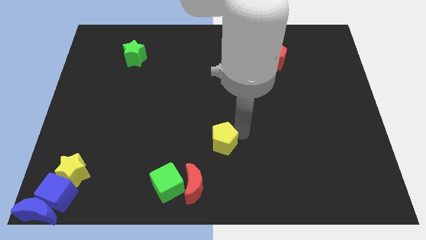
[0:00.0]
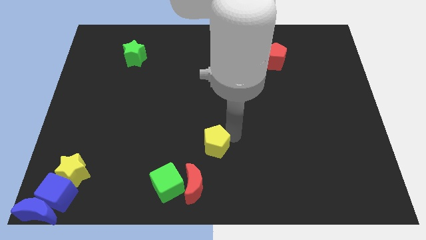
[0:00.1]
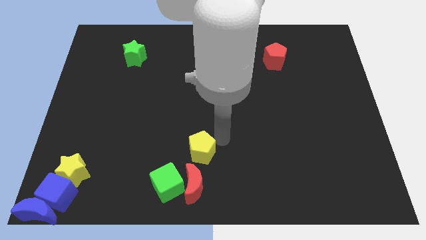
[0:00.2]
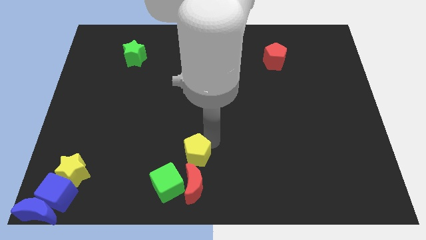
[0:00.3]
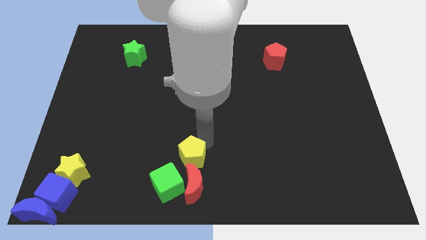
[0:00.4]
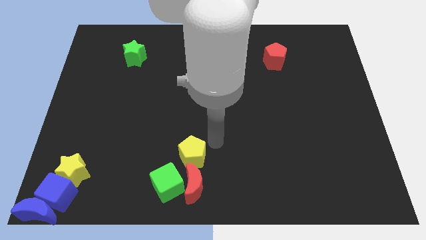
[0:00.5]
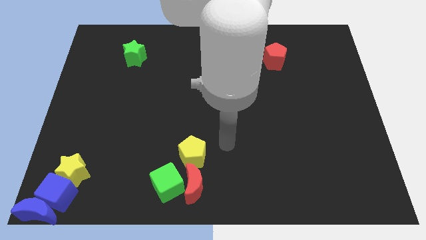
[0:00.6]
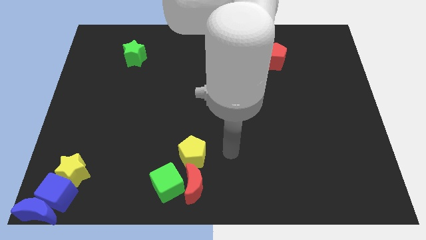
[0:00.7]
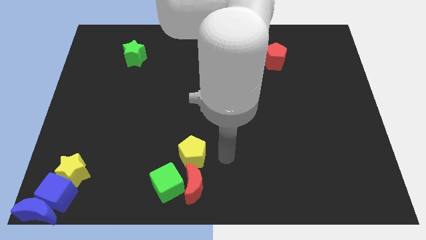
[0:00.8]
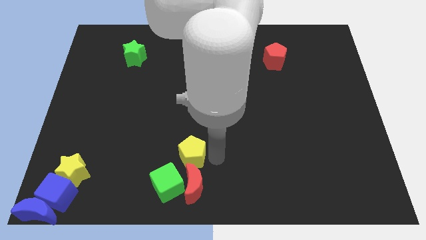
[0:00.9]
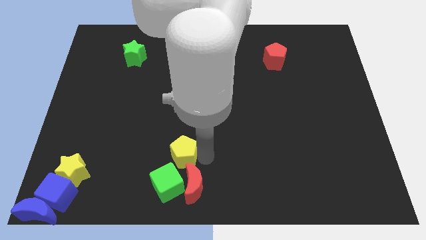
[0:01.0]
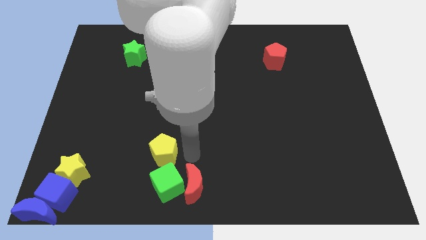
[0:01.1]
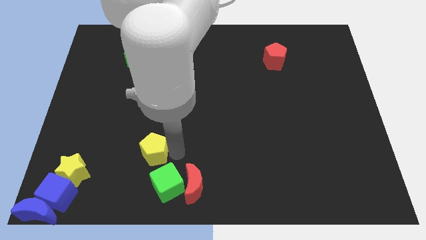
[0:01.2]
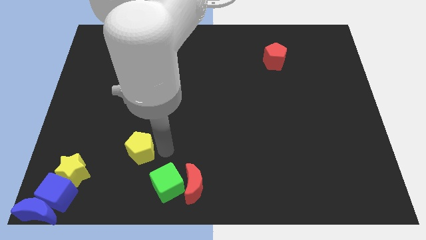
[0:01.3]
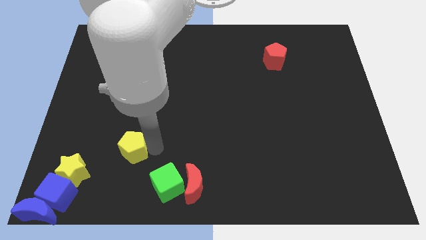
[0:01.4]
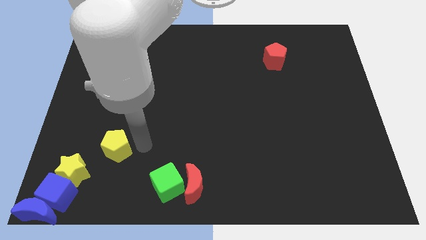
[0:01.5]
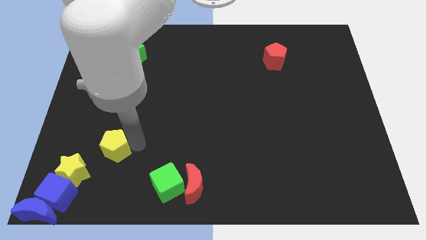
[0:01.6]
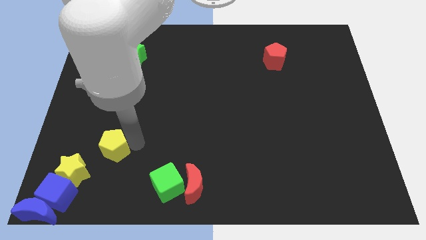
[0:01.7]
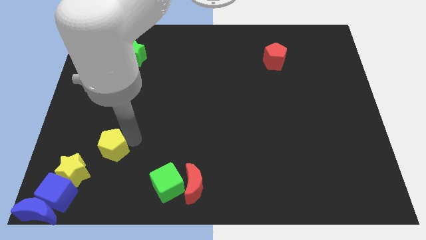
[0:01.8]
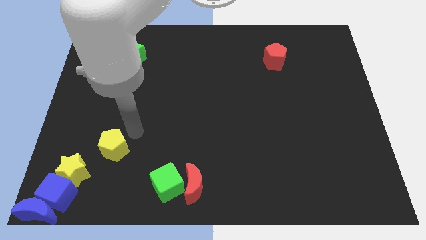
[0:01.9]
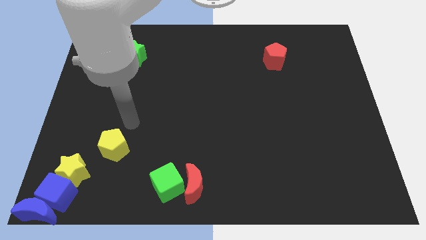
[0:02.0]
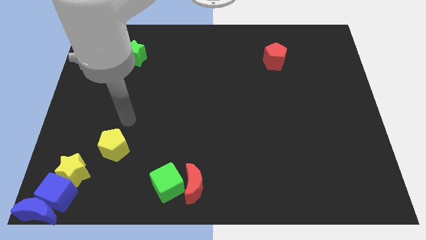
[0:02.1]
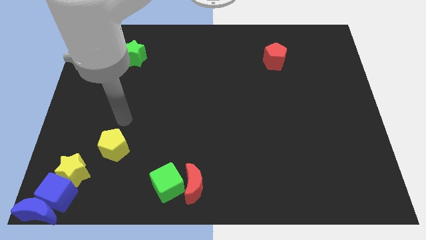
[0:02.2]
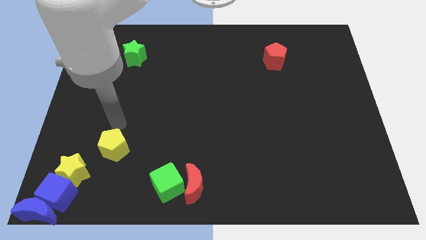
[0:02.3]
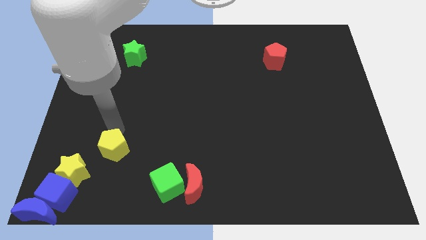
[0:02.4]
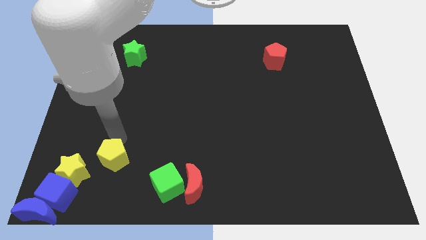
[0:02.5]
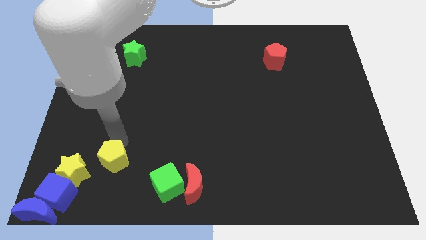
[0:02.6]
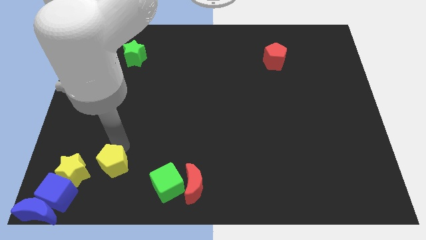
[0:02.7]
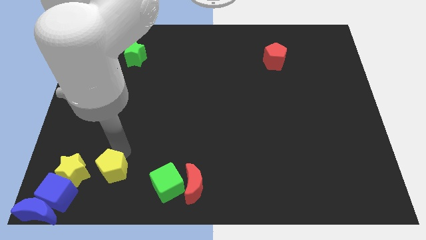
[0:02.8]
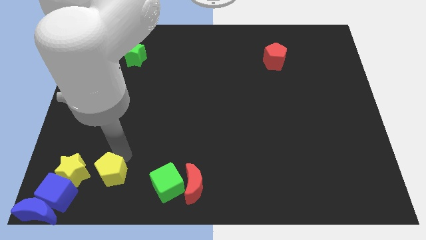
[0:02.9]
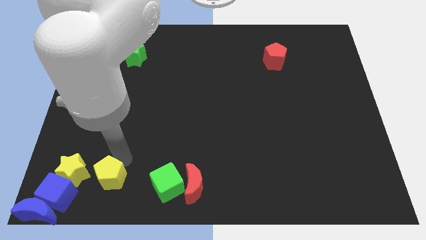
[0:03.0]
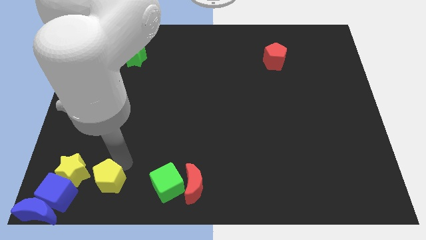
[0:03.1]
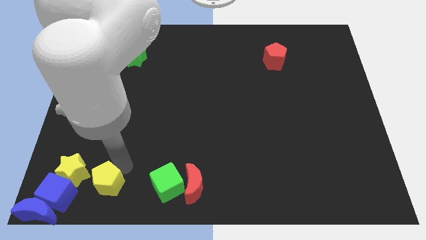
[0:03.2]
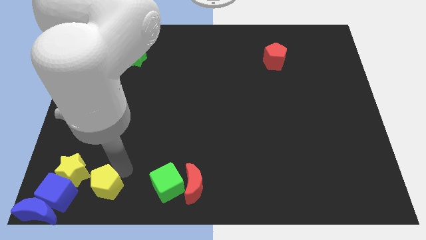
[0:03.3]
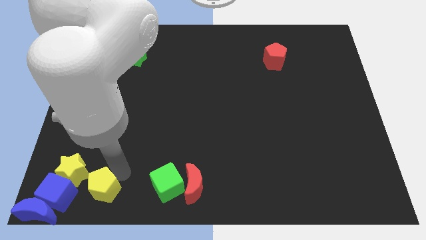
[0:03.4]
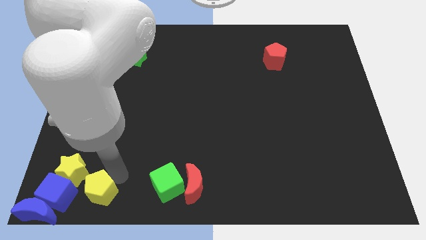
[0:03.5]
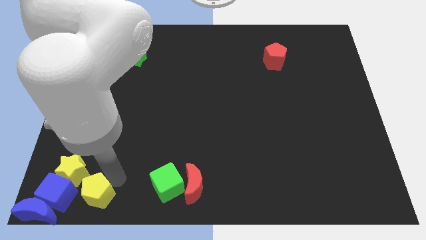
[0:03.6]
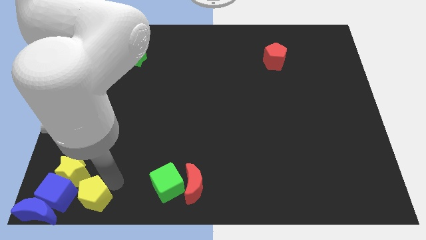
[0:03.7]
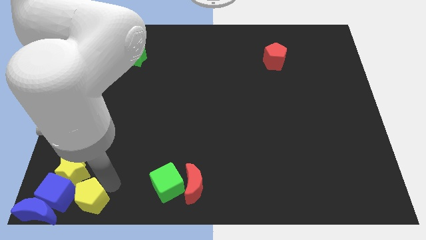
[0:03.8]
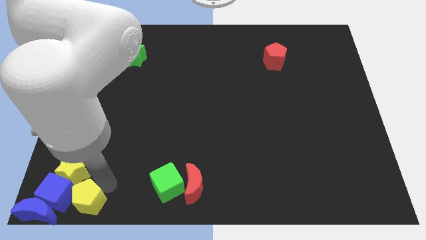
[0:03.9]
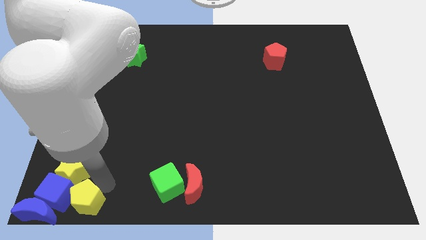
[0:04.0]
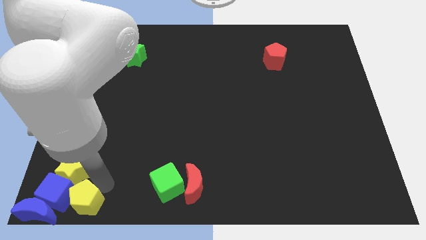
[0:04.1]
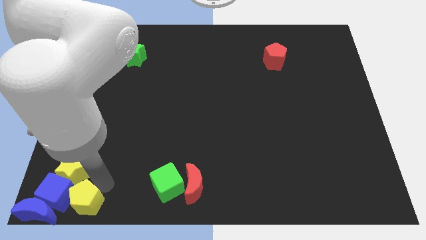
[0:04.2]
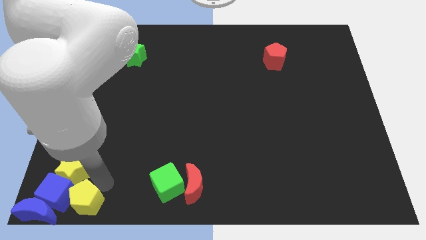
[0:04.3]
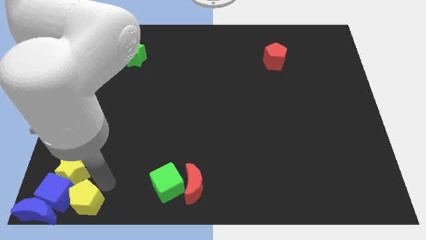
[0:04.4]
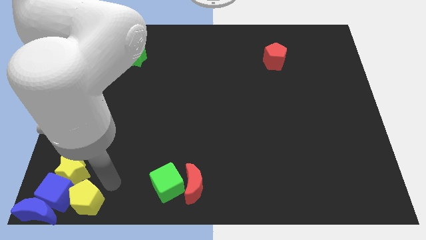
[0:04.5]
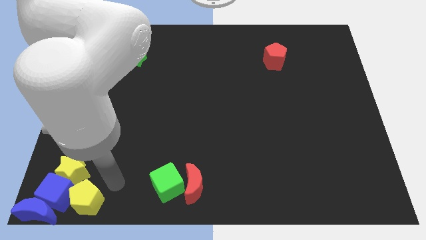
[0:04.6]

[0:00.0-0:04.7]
push the yellow pentagon to the right of the blue cube

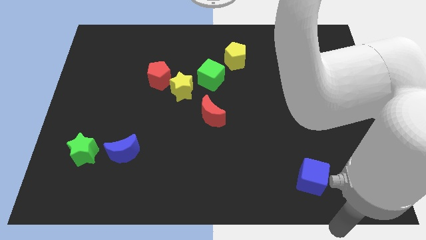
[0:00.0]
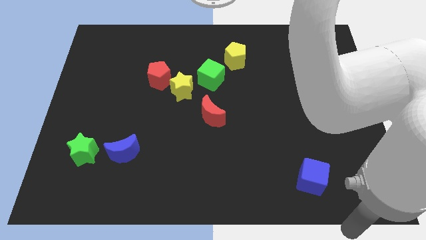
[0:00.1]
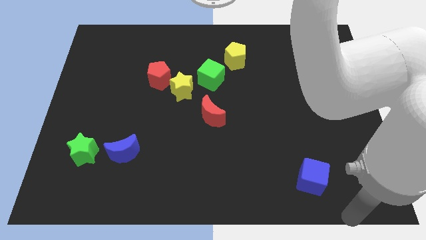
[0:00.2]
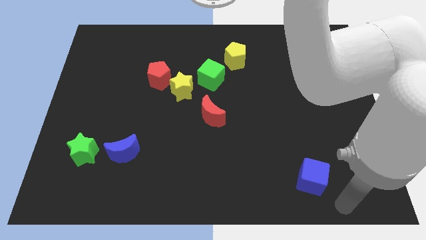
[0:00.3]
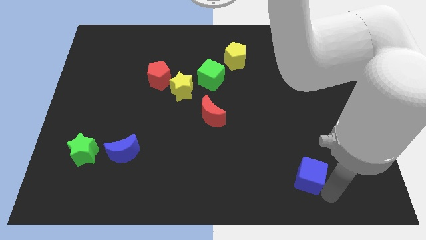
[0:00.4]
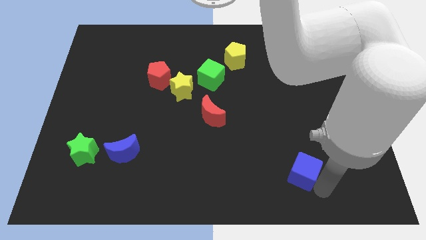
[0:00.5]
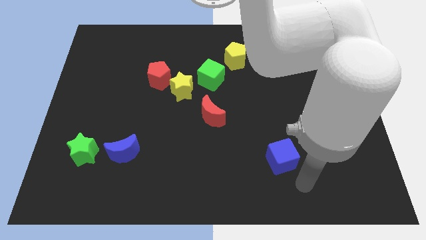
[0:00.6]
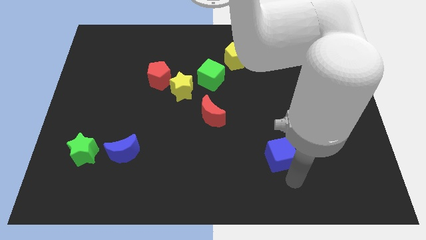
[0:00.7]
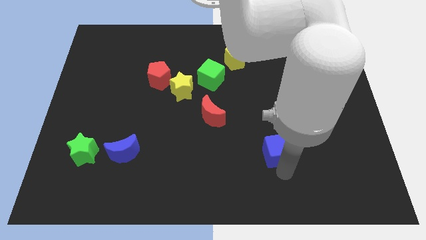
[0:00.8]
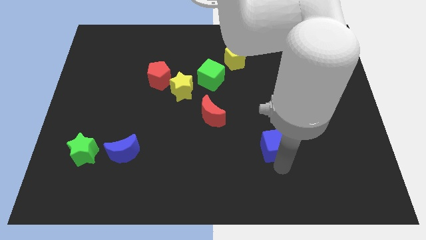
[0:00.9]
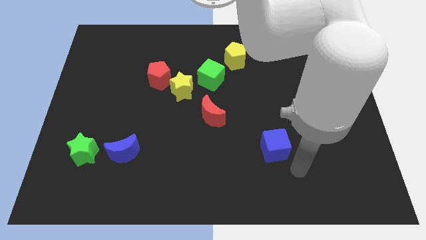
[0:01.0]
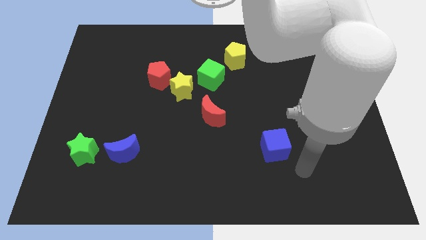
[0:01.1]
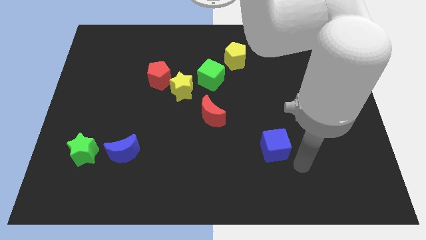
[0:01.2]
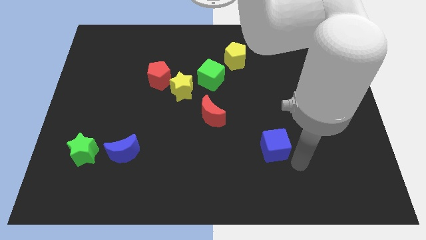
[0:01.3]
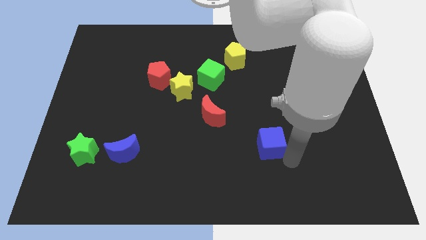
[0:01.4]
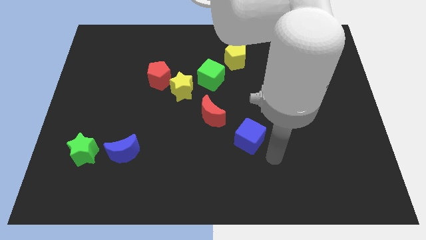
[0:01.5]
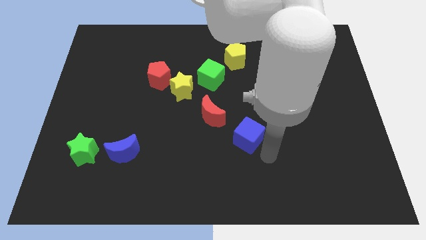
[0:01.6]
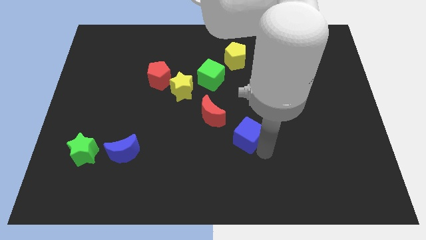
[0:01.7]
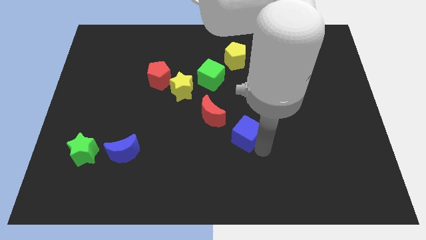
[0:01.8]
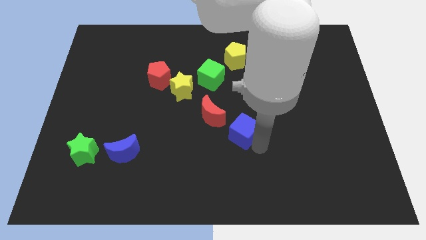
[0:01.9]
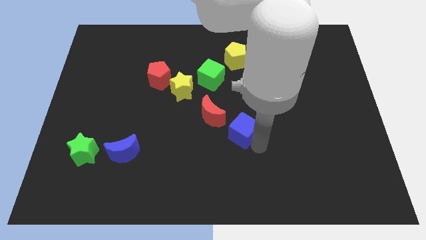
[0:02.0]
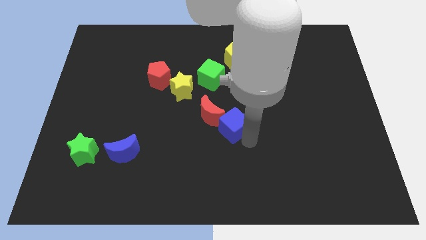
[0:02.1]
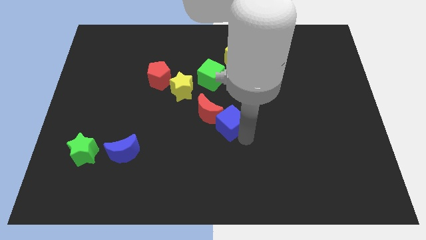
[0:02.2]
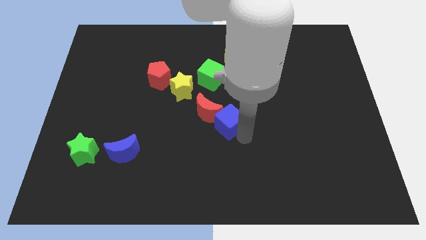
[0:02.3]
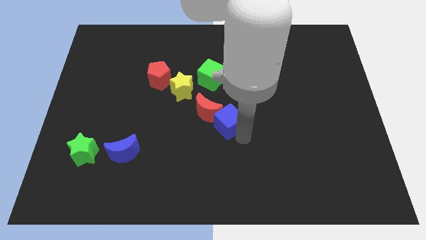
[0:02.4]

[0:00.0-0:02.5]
push the blue cube towards the red moon

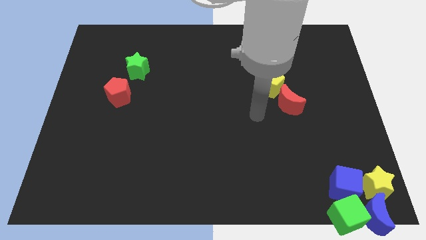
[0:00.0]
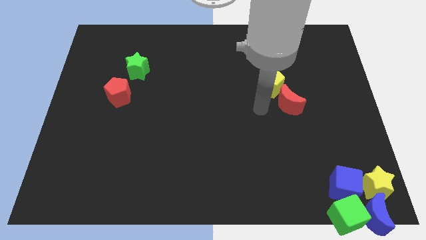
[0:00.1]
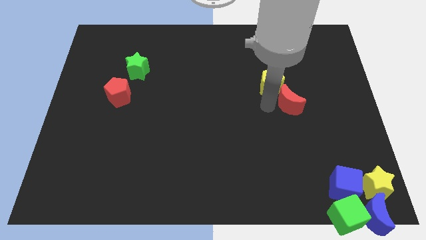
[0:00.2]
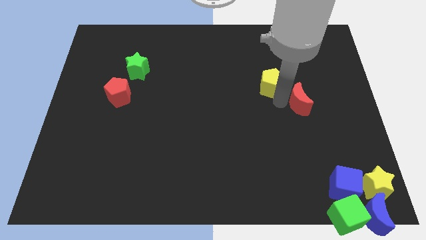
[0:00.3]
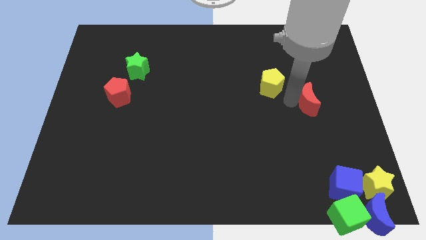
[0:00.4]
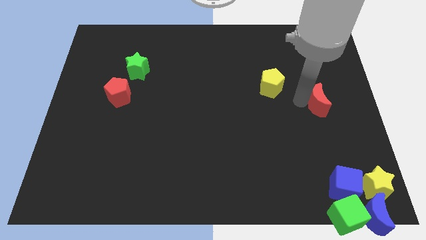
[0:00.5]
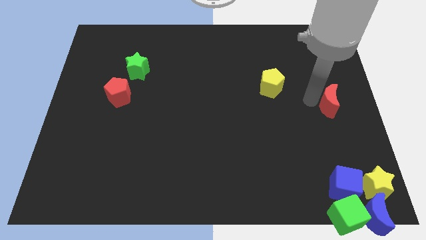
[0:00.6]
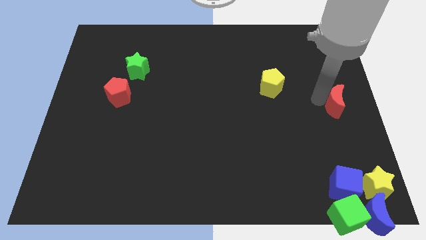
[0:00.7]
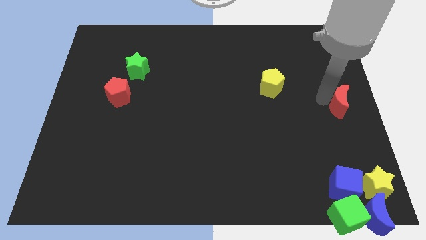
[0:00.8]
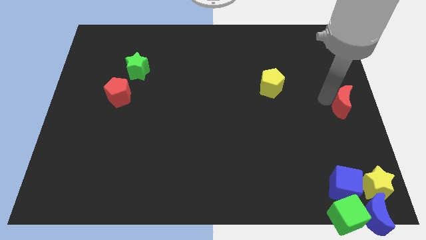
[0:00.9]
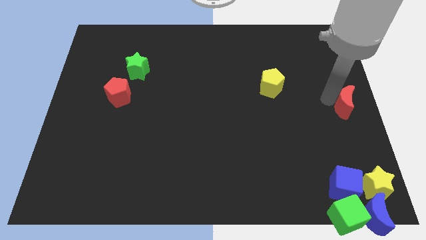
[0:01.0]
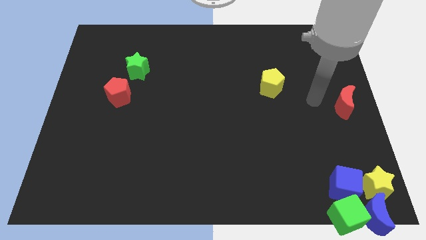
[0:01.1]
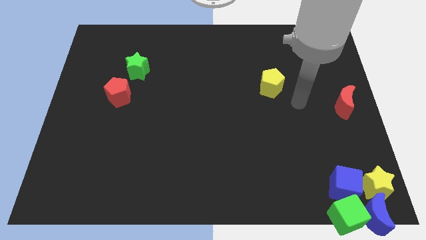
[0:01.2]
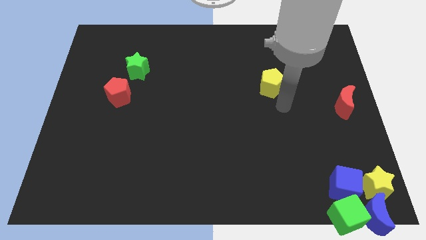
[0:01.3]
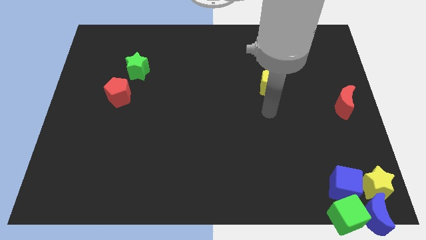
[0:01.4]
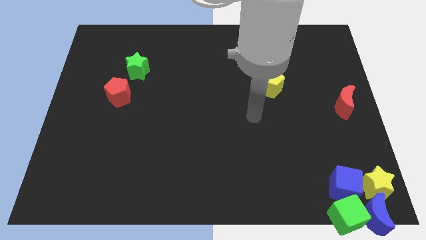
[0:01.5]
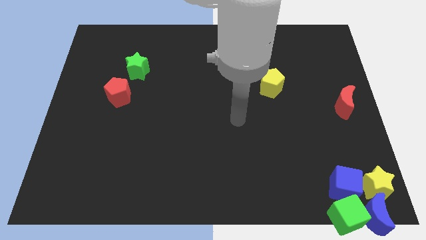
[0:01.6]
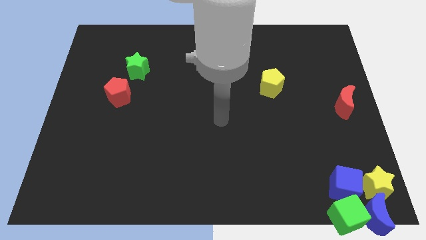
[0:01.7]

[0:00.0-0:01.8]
move the red moon at the center right

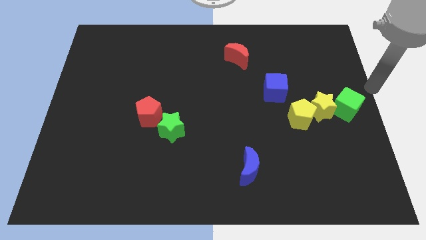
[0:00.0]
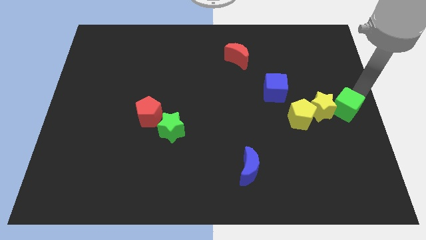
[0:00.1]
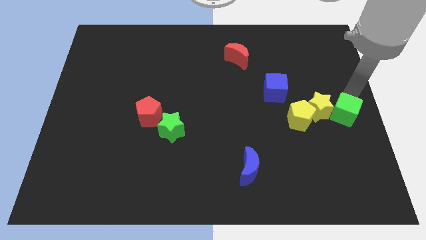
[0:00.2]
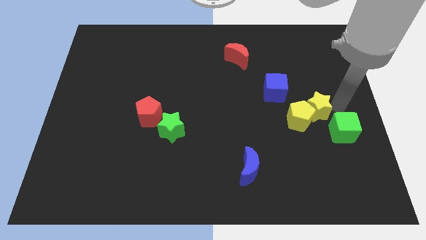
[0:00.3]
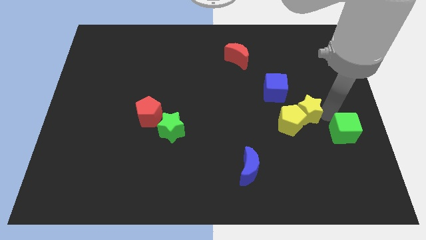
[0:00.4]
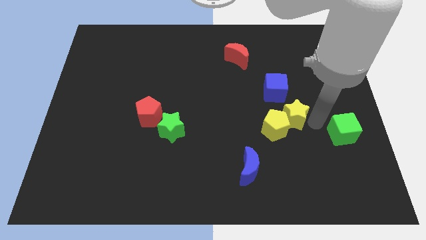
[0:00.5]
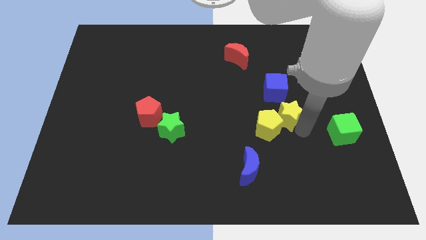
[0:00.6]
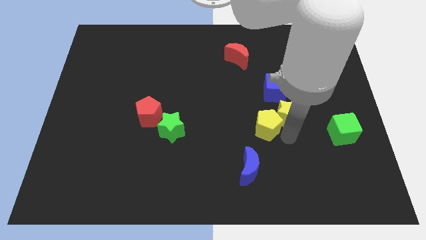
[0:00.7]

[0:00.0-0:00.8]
separate the green cube from the group of yellow blocks
